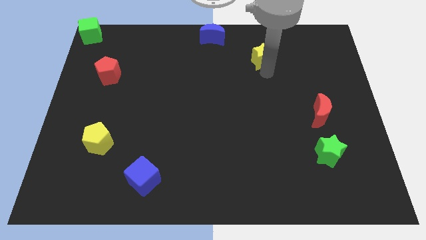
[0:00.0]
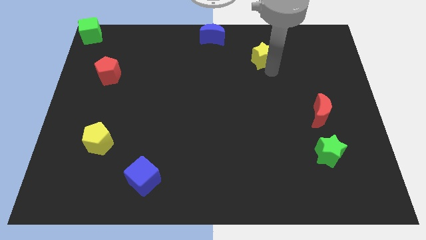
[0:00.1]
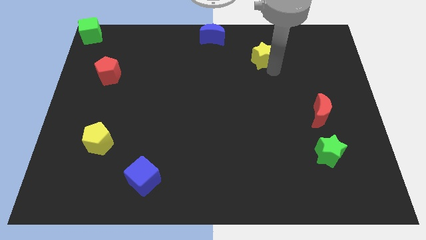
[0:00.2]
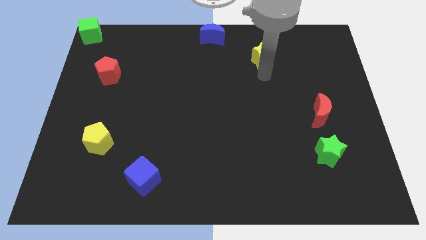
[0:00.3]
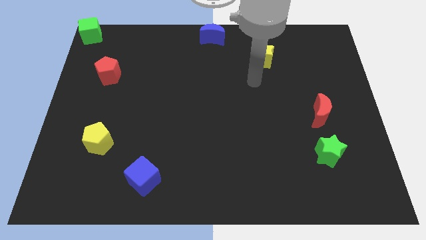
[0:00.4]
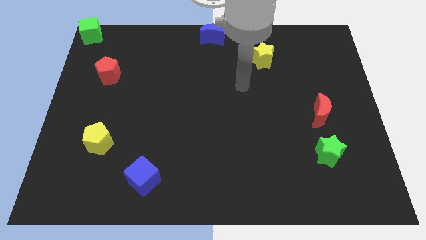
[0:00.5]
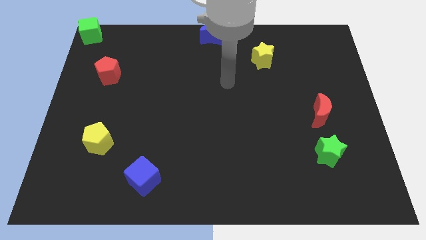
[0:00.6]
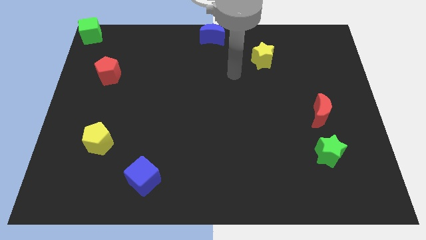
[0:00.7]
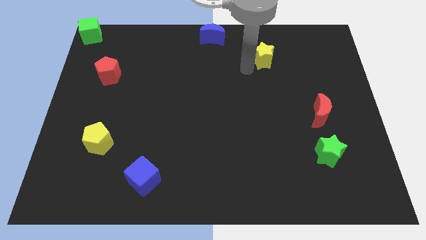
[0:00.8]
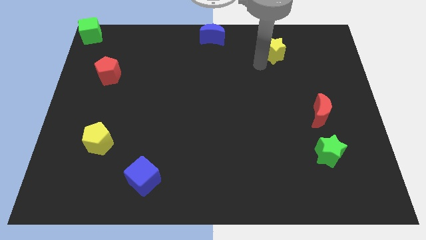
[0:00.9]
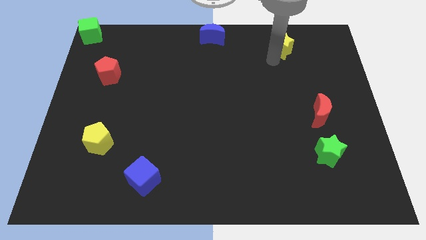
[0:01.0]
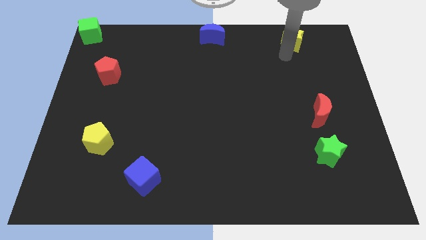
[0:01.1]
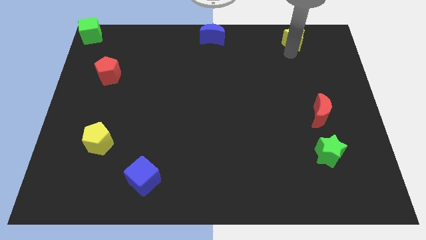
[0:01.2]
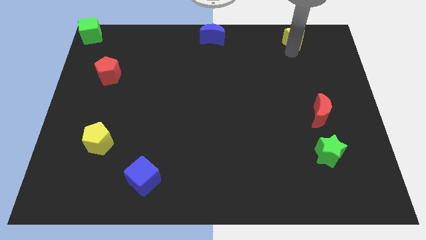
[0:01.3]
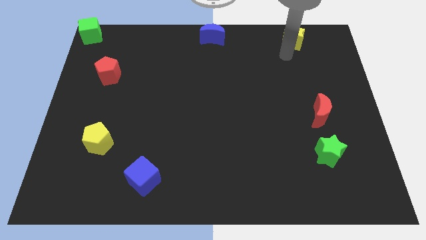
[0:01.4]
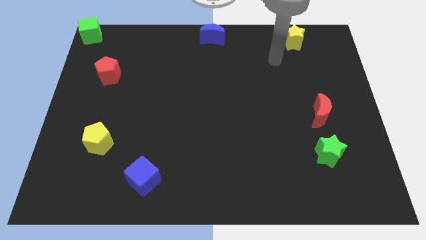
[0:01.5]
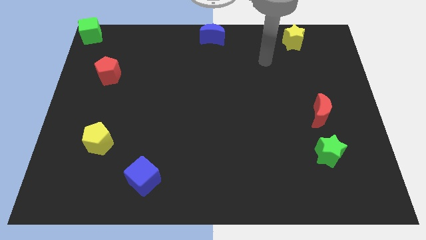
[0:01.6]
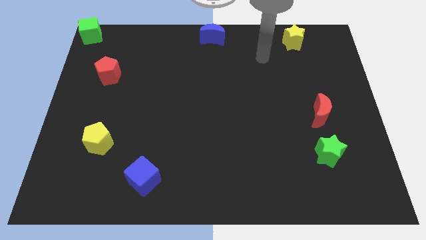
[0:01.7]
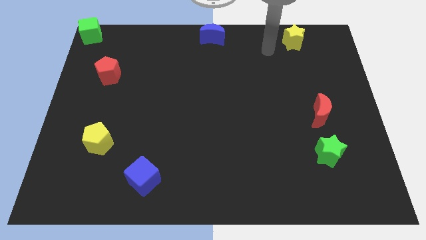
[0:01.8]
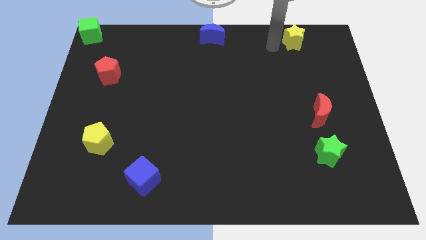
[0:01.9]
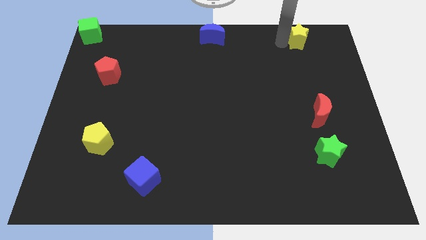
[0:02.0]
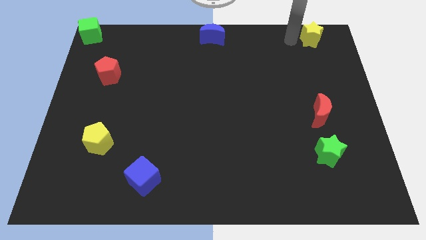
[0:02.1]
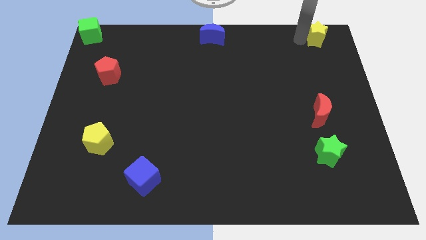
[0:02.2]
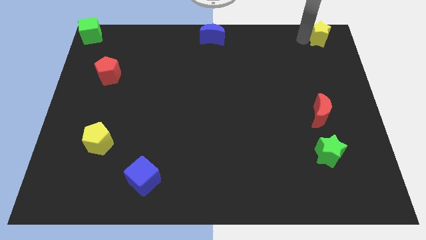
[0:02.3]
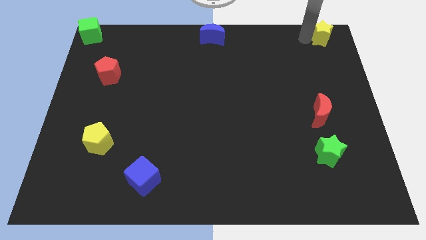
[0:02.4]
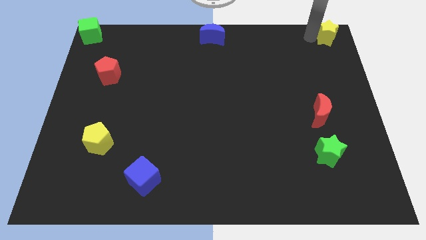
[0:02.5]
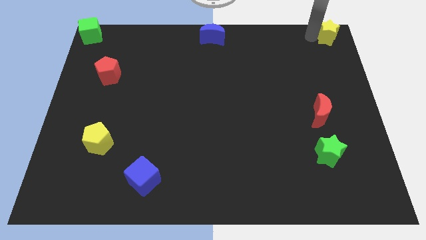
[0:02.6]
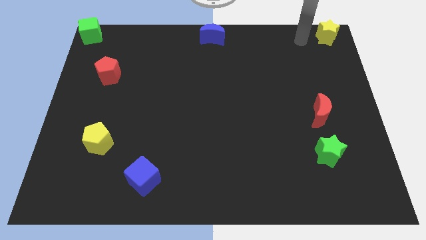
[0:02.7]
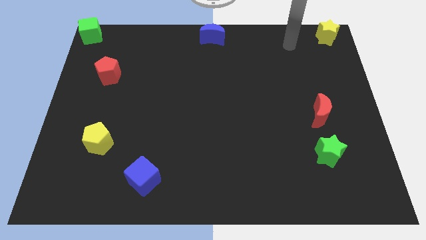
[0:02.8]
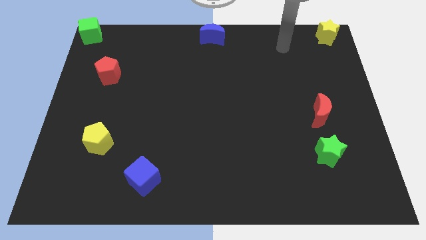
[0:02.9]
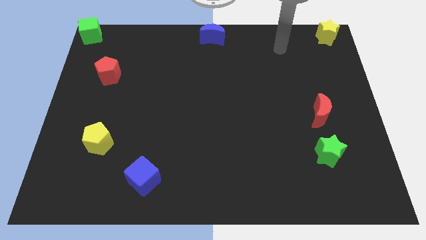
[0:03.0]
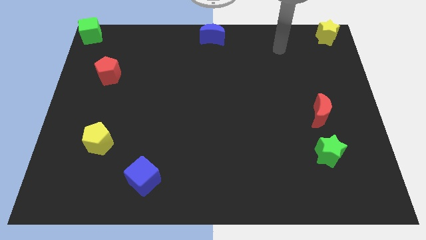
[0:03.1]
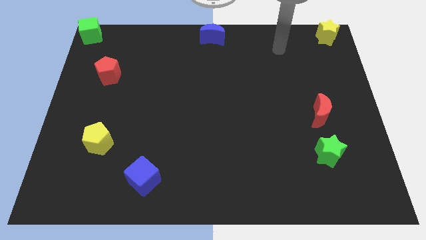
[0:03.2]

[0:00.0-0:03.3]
put yellow star at top right corner

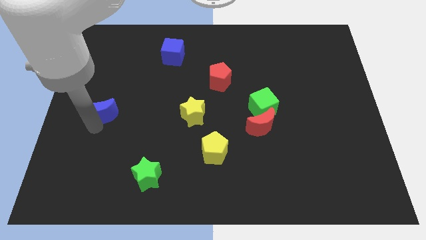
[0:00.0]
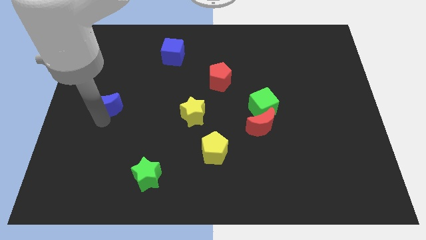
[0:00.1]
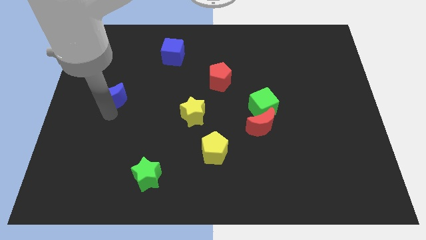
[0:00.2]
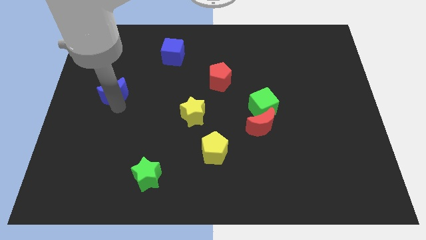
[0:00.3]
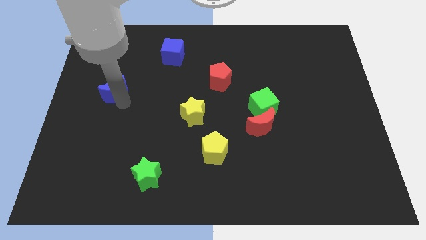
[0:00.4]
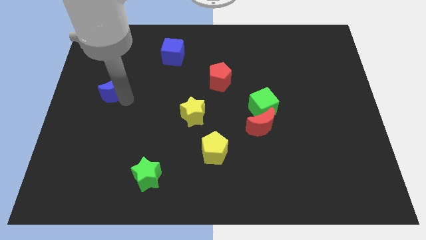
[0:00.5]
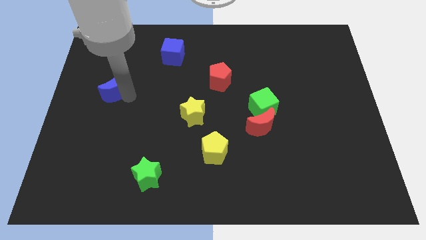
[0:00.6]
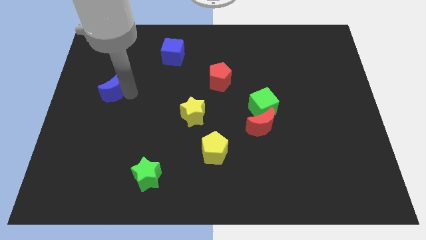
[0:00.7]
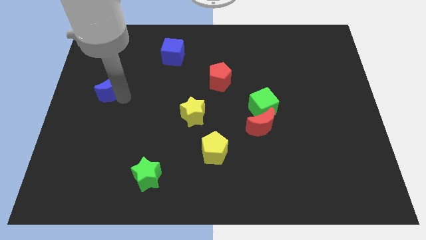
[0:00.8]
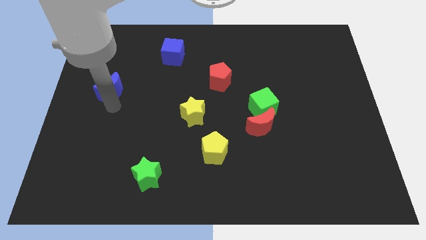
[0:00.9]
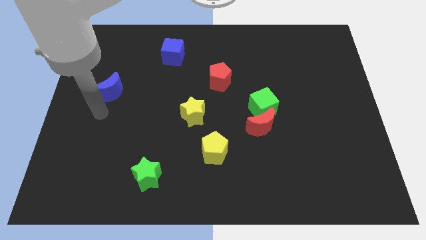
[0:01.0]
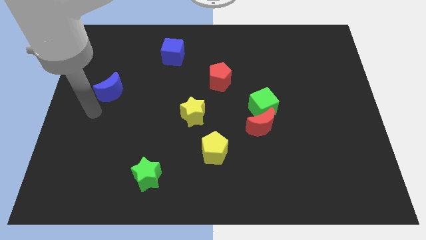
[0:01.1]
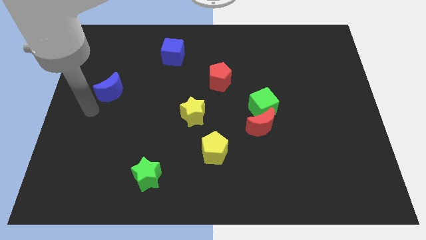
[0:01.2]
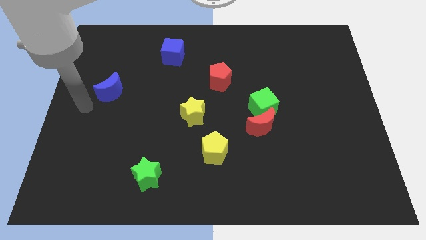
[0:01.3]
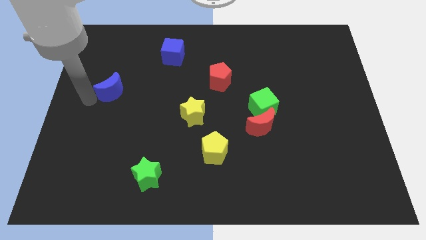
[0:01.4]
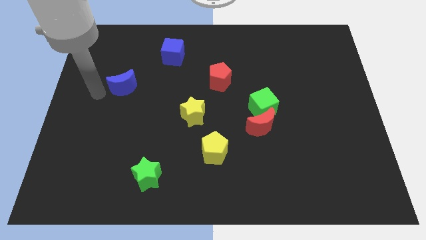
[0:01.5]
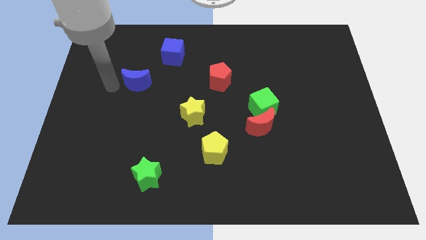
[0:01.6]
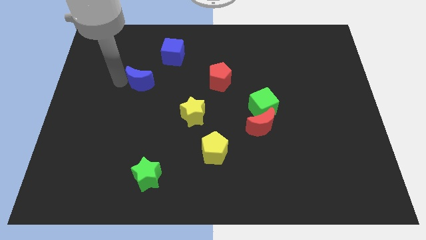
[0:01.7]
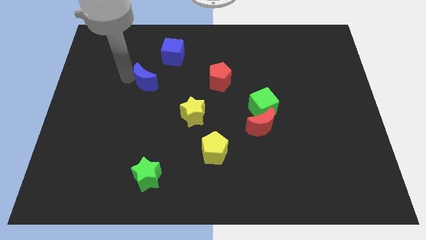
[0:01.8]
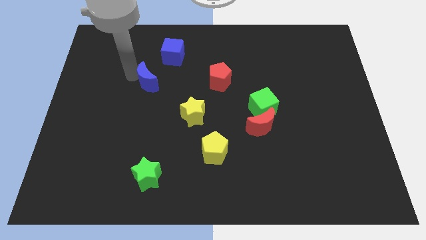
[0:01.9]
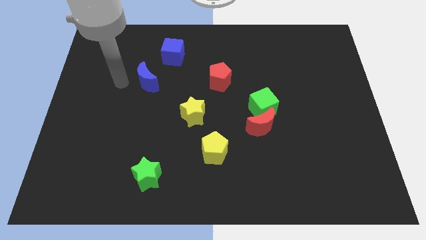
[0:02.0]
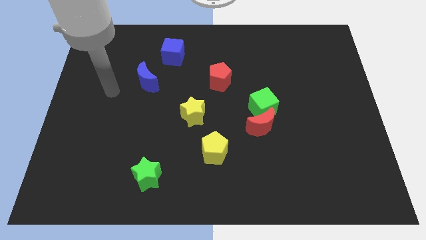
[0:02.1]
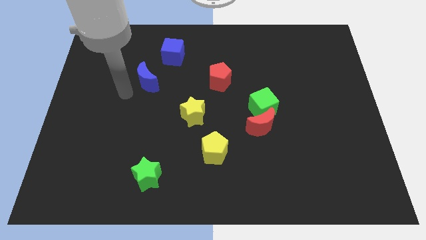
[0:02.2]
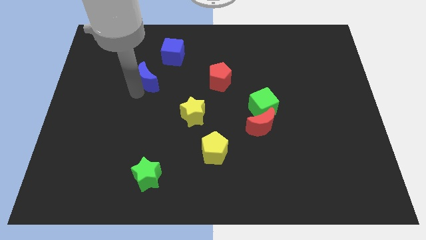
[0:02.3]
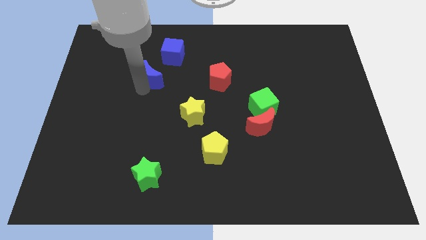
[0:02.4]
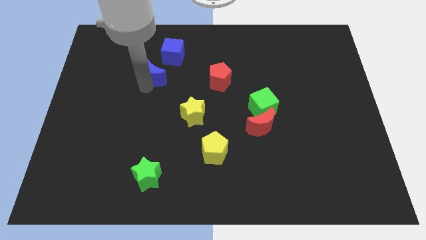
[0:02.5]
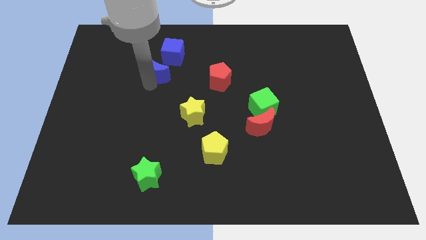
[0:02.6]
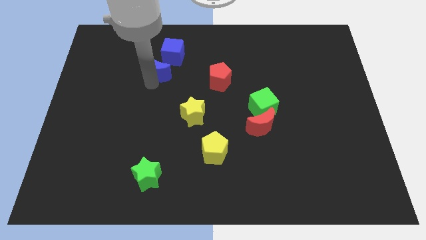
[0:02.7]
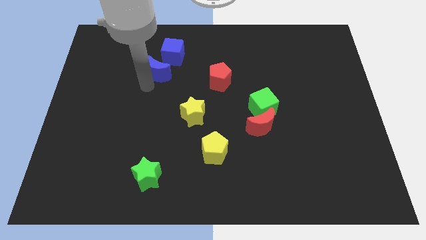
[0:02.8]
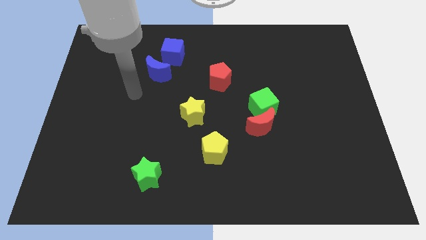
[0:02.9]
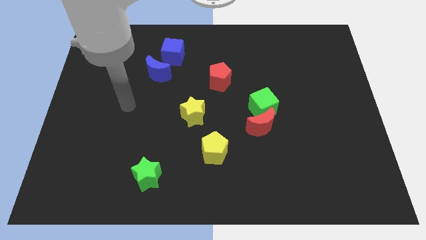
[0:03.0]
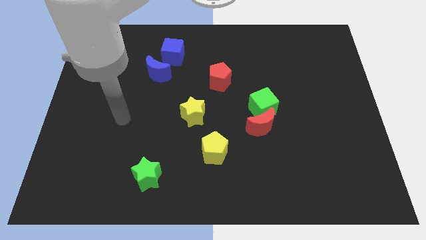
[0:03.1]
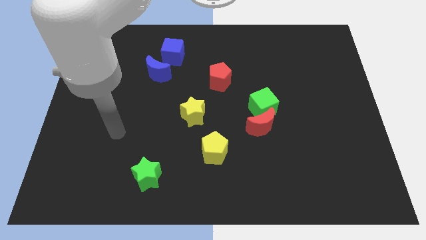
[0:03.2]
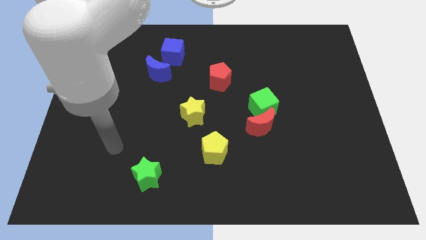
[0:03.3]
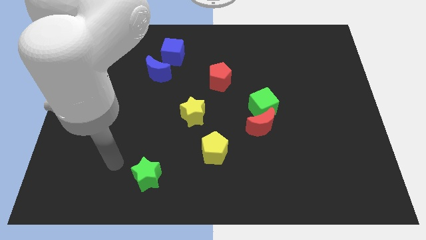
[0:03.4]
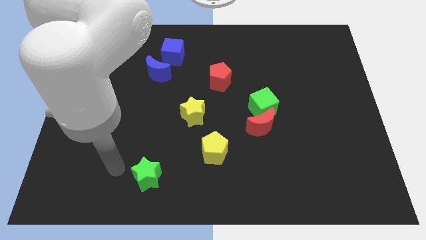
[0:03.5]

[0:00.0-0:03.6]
push the blue crescent close to the blue cube

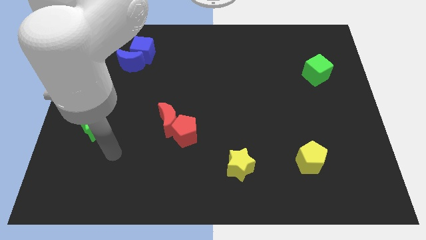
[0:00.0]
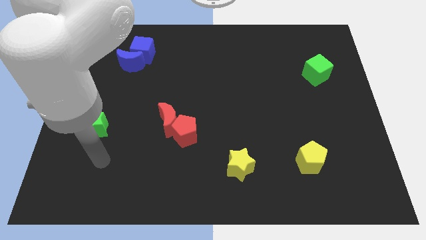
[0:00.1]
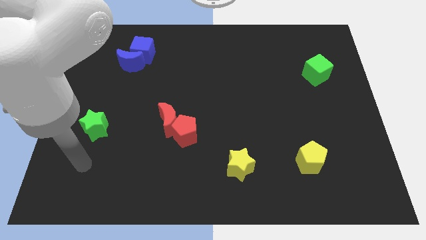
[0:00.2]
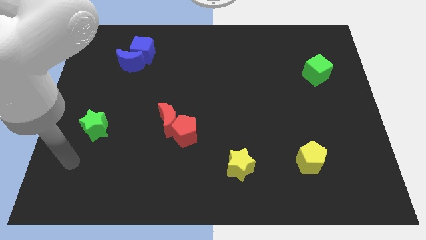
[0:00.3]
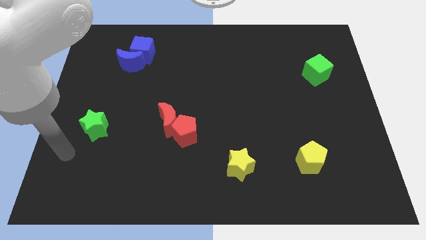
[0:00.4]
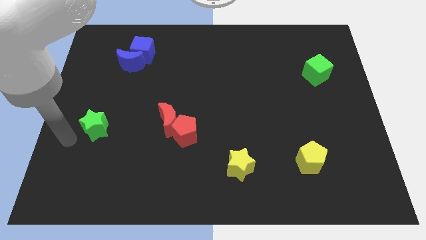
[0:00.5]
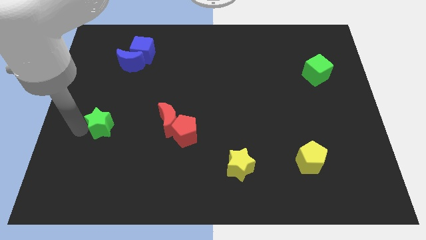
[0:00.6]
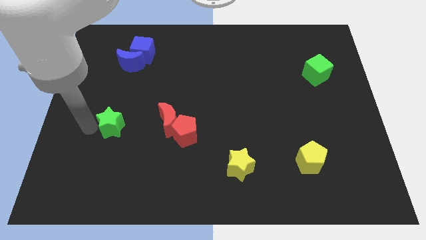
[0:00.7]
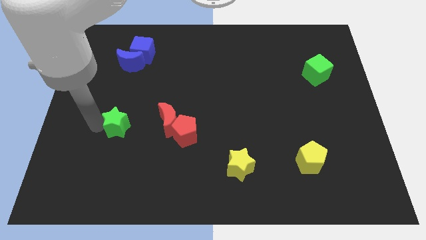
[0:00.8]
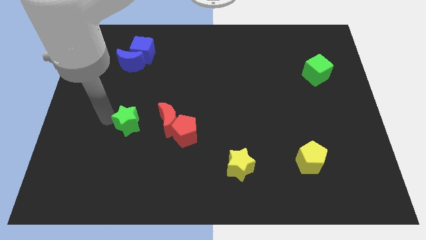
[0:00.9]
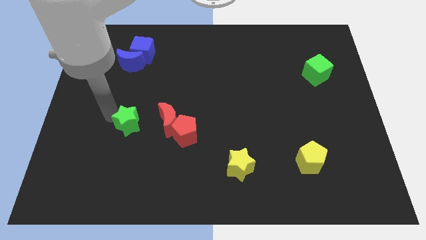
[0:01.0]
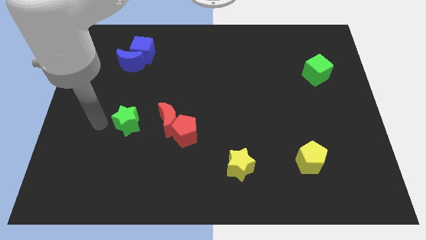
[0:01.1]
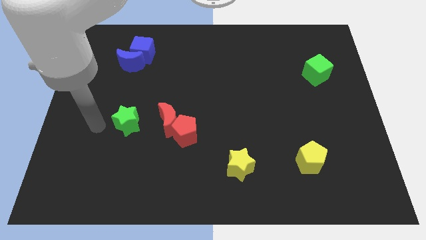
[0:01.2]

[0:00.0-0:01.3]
place the green star to the left of the red crescent

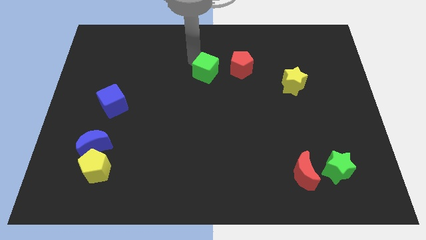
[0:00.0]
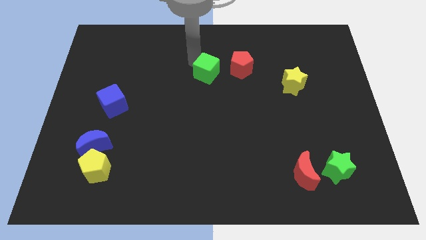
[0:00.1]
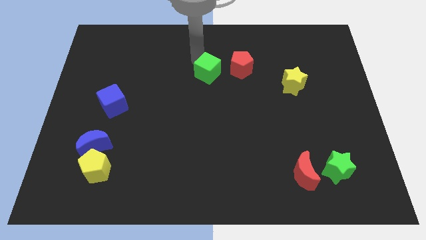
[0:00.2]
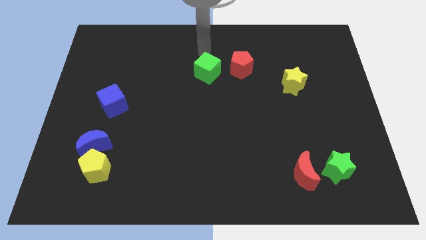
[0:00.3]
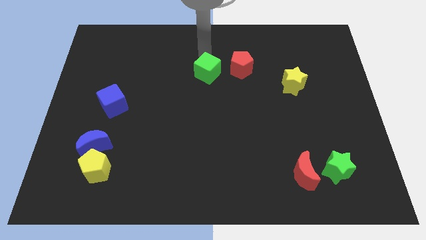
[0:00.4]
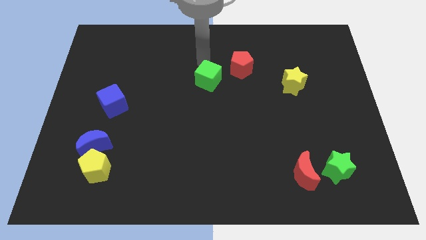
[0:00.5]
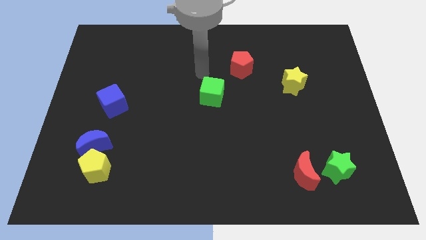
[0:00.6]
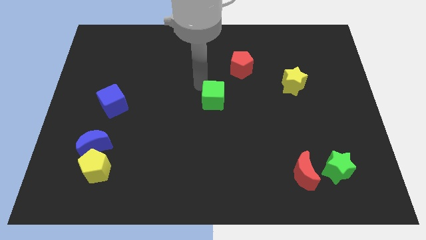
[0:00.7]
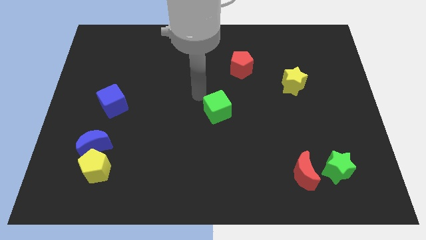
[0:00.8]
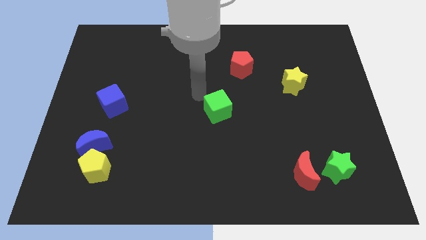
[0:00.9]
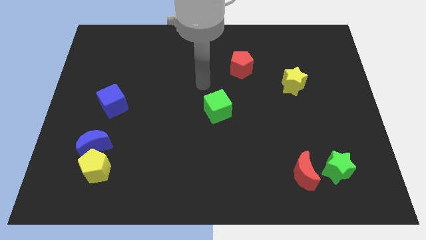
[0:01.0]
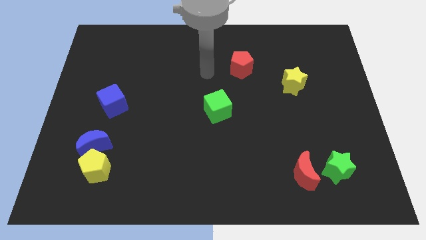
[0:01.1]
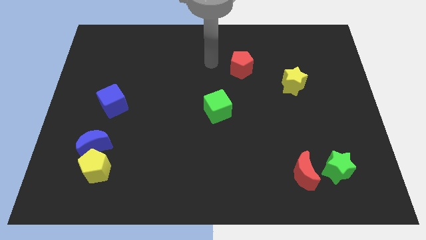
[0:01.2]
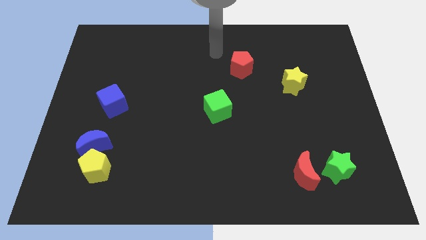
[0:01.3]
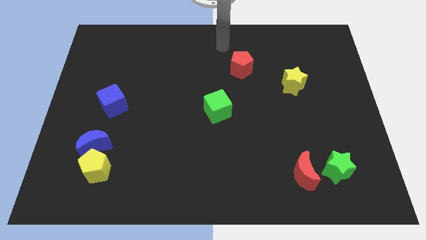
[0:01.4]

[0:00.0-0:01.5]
move the green cube downwards
